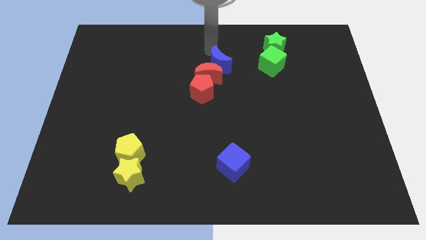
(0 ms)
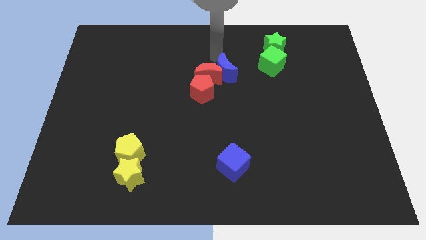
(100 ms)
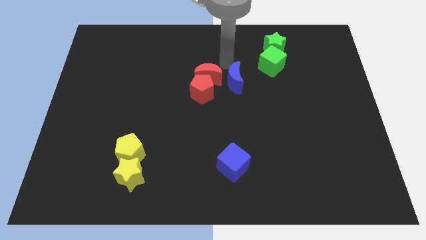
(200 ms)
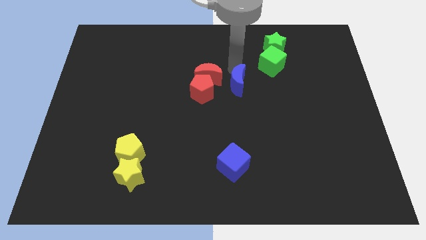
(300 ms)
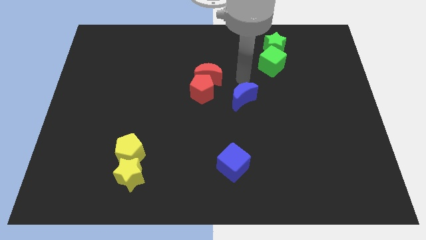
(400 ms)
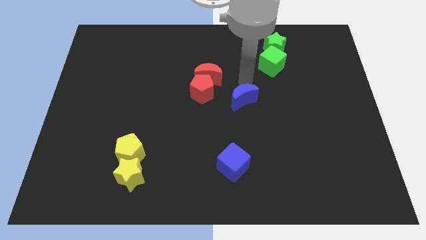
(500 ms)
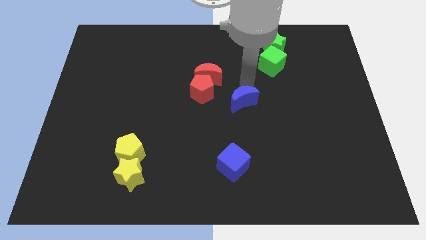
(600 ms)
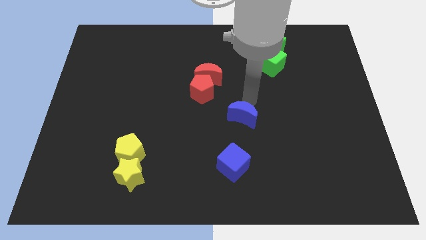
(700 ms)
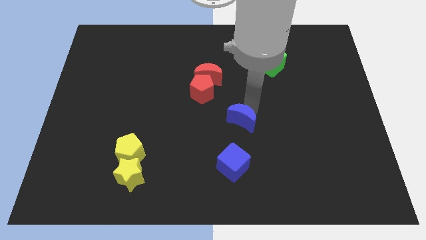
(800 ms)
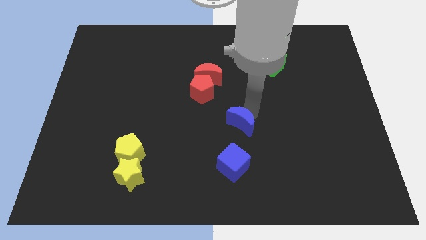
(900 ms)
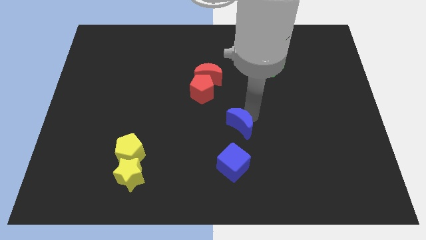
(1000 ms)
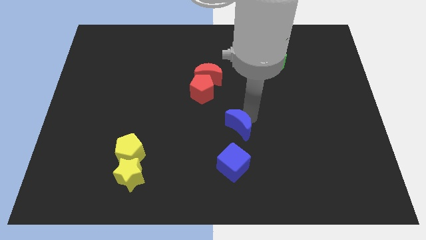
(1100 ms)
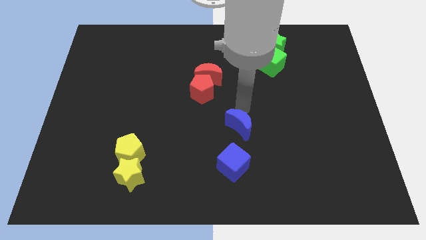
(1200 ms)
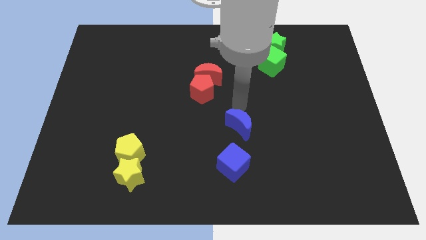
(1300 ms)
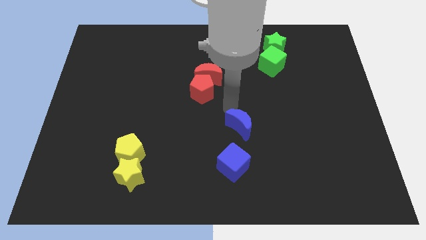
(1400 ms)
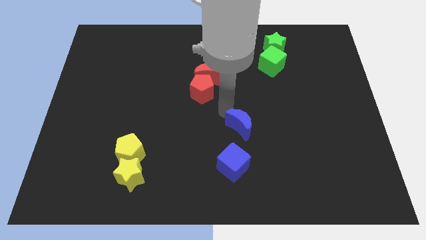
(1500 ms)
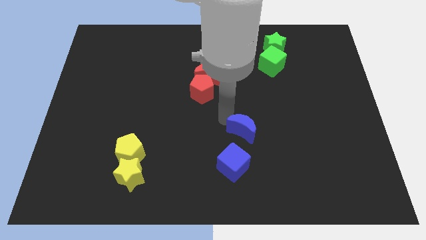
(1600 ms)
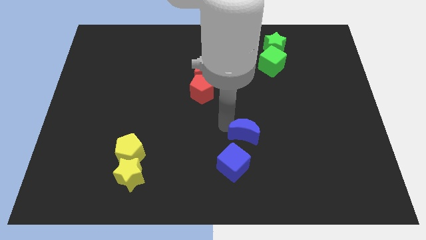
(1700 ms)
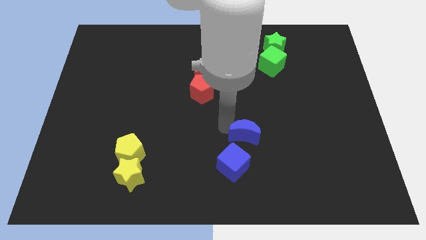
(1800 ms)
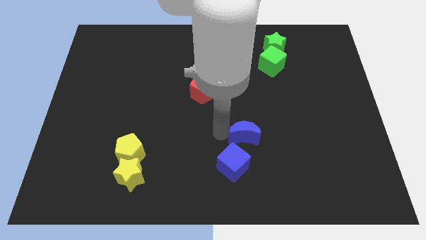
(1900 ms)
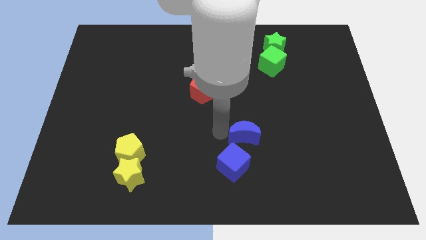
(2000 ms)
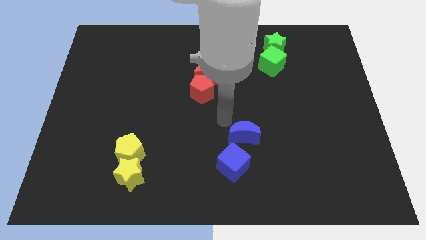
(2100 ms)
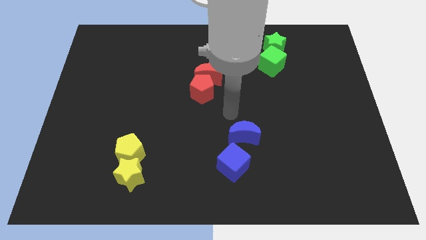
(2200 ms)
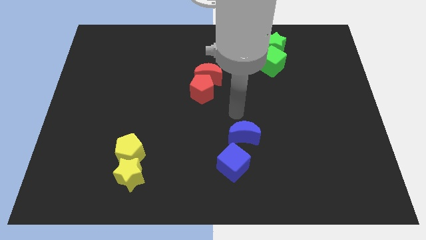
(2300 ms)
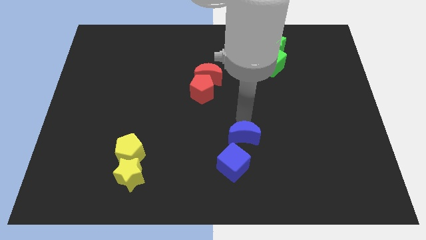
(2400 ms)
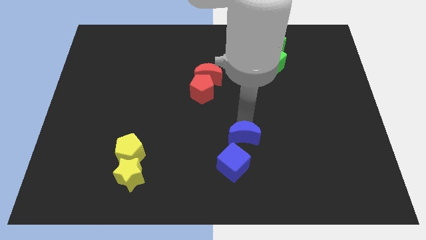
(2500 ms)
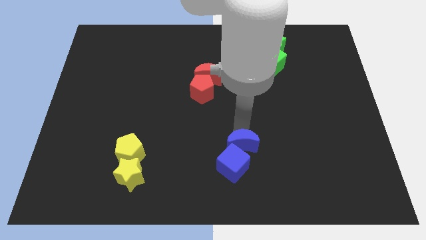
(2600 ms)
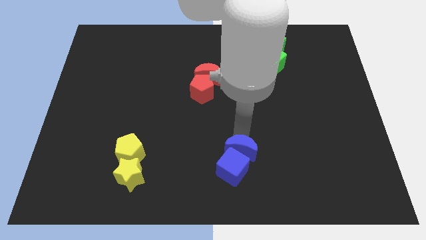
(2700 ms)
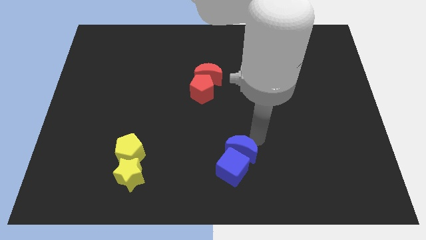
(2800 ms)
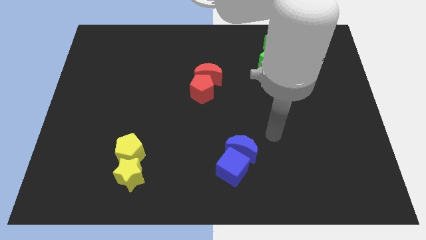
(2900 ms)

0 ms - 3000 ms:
place the blue crescent above the blue blue cube

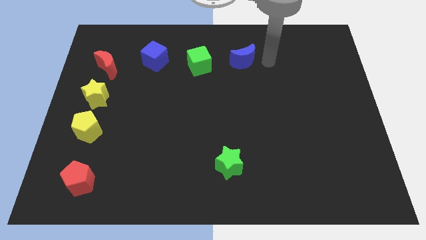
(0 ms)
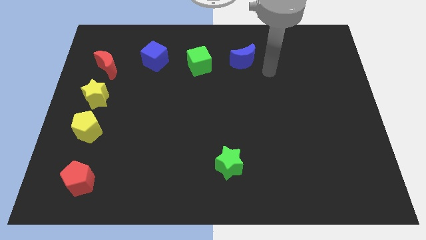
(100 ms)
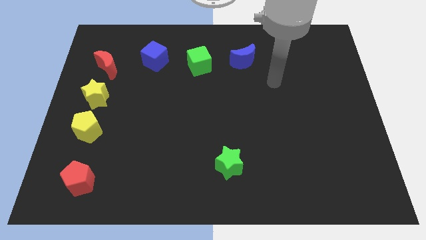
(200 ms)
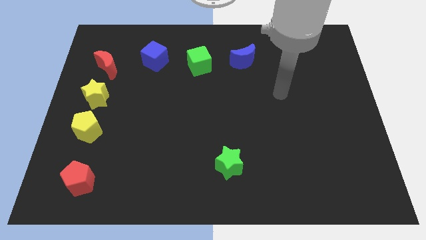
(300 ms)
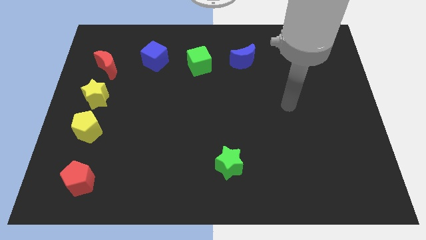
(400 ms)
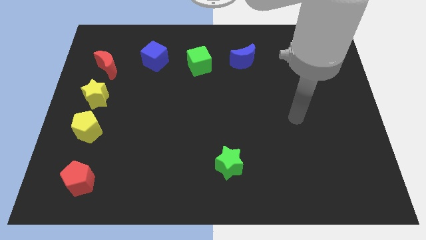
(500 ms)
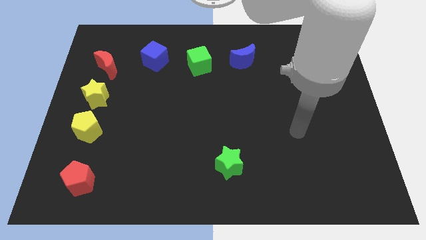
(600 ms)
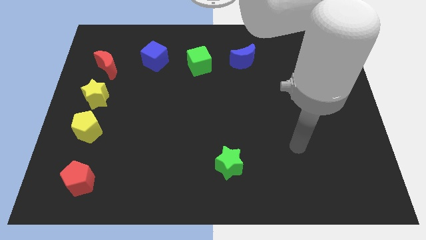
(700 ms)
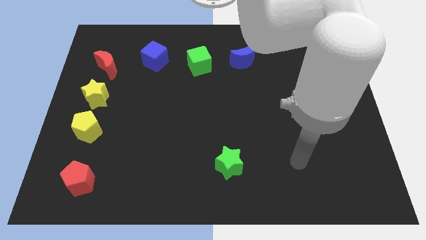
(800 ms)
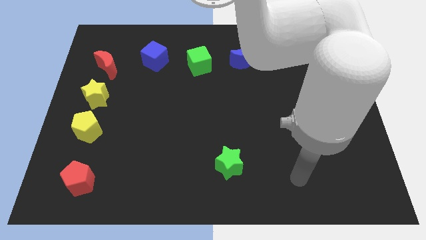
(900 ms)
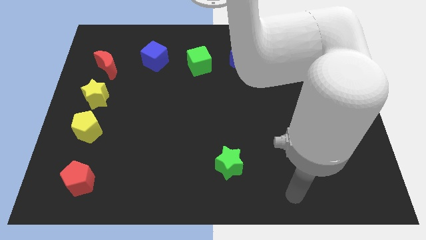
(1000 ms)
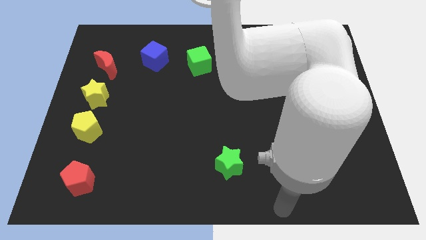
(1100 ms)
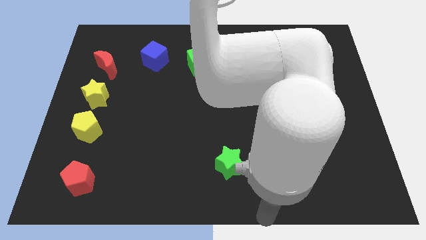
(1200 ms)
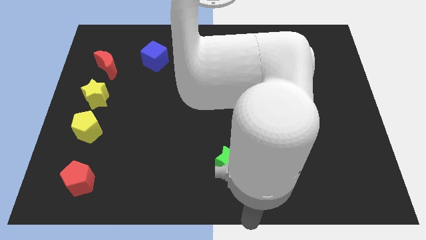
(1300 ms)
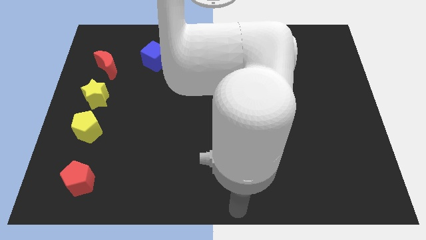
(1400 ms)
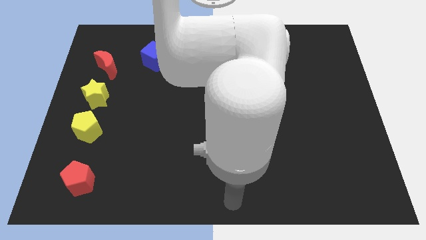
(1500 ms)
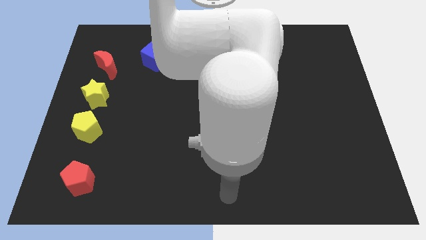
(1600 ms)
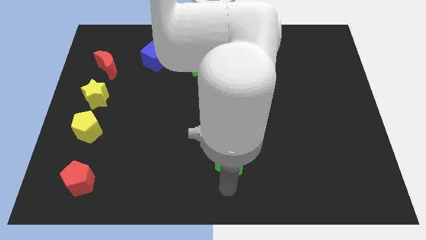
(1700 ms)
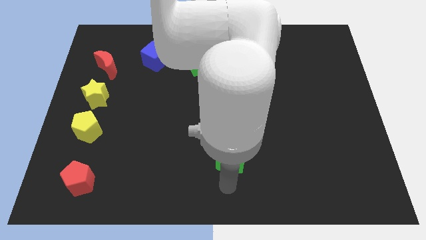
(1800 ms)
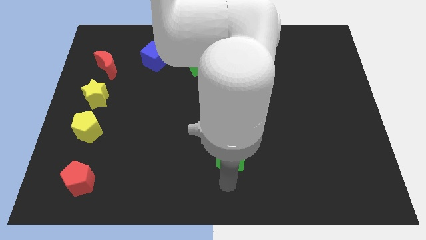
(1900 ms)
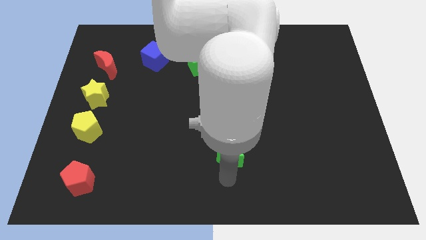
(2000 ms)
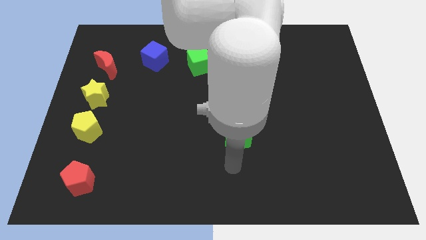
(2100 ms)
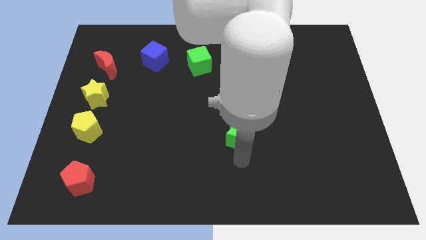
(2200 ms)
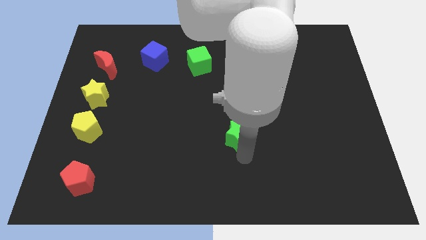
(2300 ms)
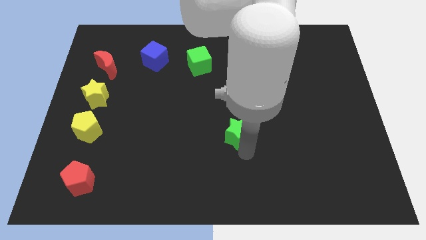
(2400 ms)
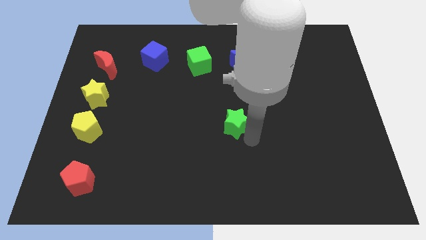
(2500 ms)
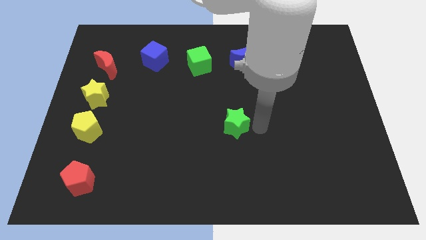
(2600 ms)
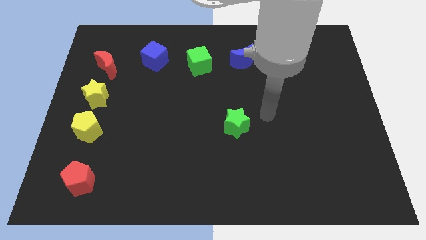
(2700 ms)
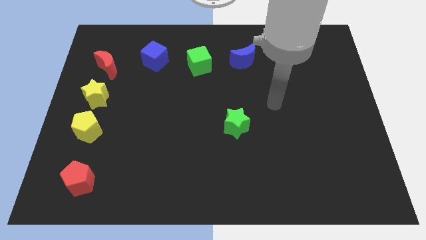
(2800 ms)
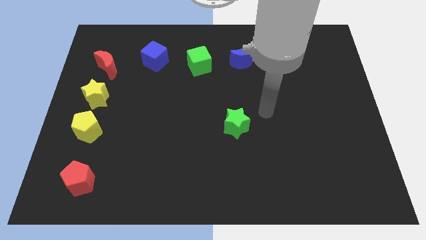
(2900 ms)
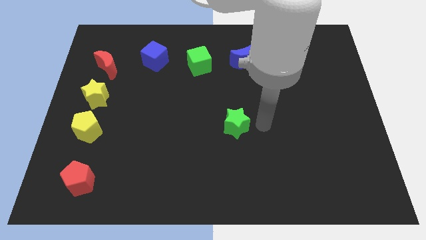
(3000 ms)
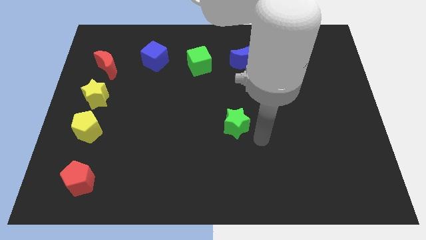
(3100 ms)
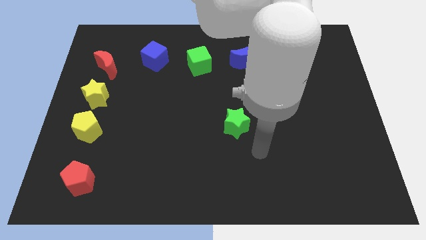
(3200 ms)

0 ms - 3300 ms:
move the green star to the center of the board

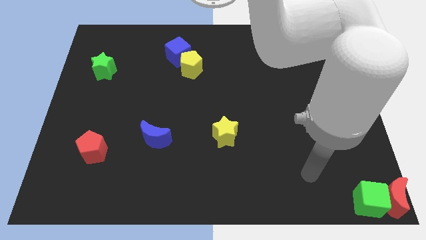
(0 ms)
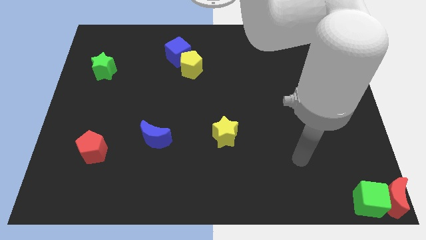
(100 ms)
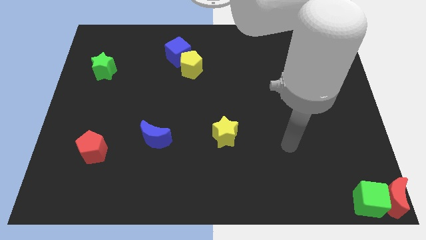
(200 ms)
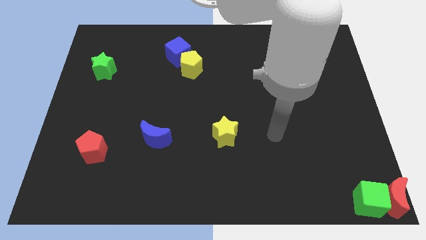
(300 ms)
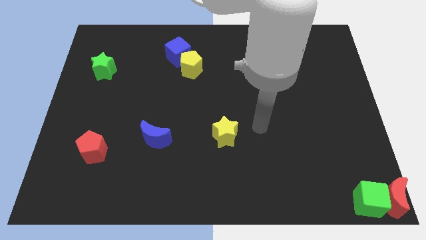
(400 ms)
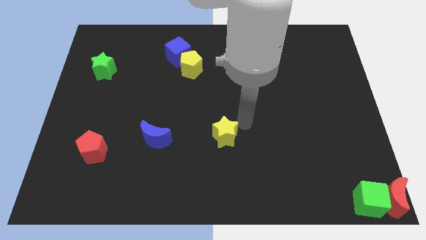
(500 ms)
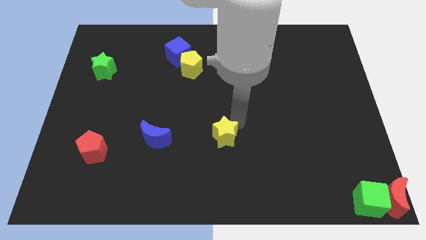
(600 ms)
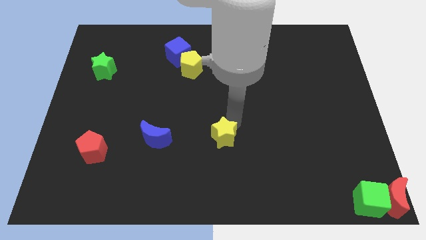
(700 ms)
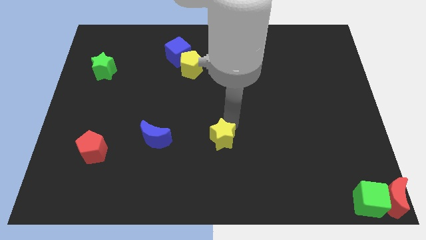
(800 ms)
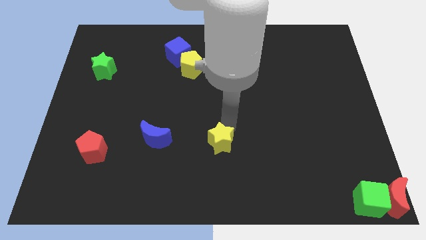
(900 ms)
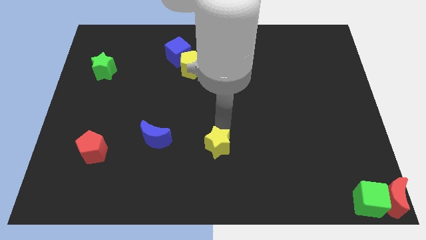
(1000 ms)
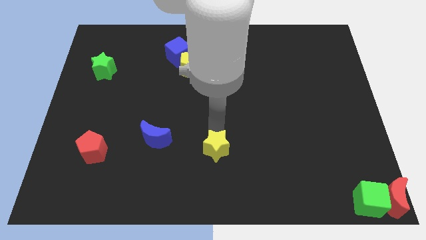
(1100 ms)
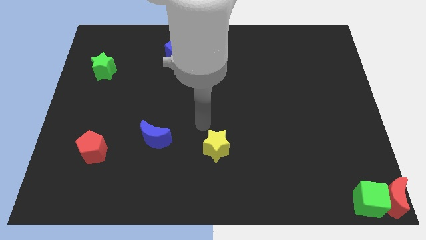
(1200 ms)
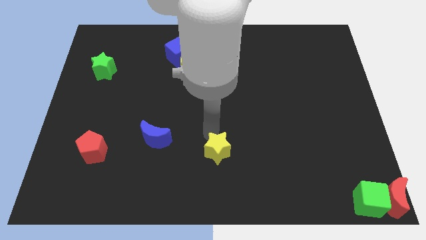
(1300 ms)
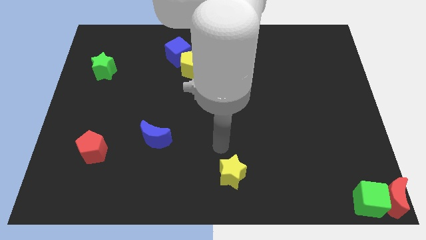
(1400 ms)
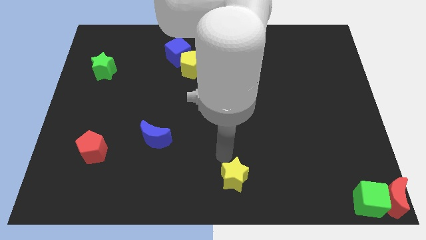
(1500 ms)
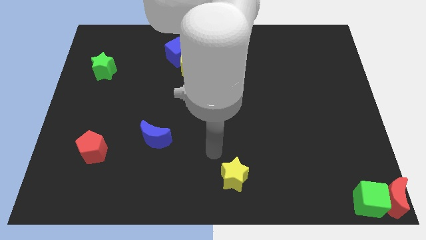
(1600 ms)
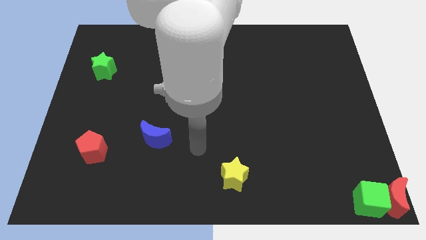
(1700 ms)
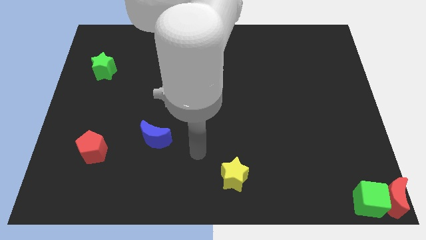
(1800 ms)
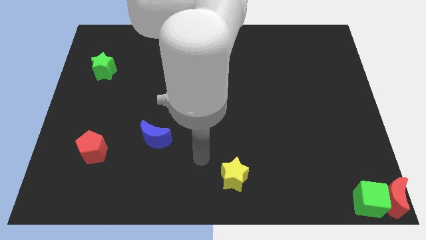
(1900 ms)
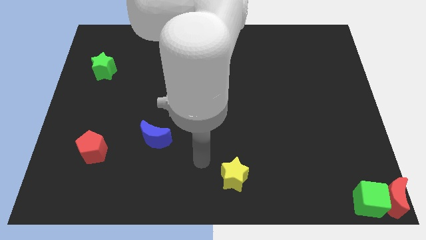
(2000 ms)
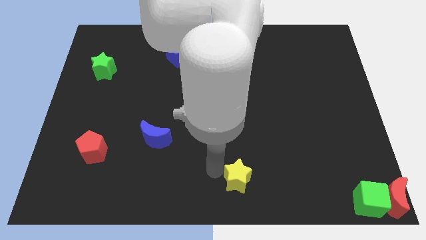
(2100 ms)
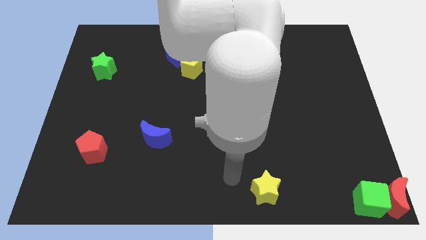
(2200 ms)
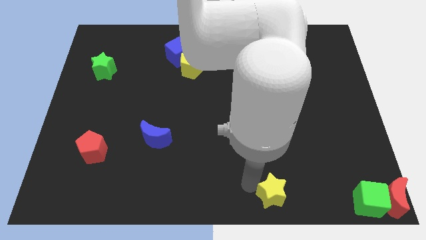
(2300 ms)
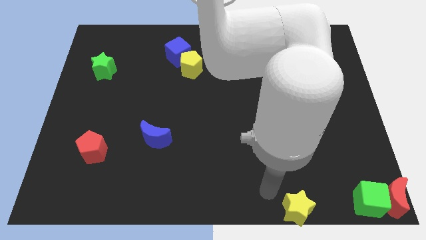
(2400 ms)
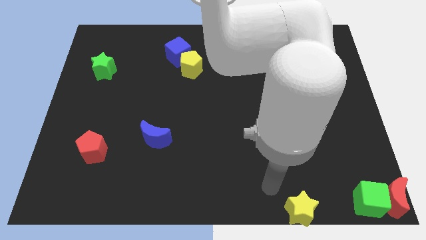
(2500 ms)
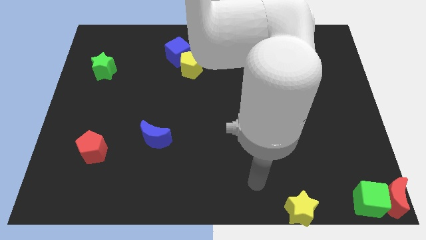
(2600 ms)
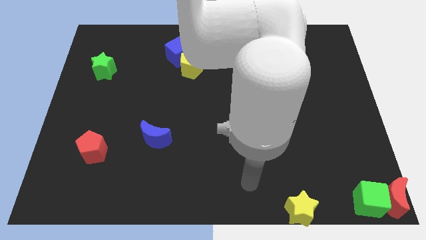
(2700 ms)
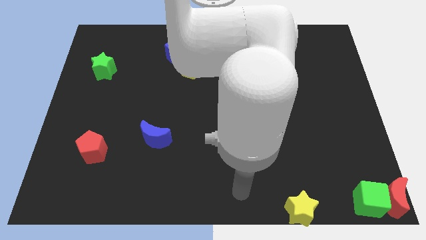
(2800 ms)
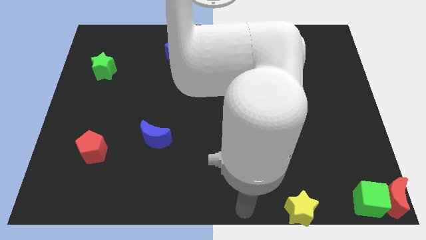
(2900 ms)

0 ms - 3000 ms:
move the yellow star to the horizontal left of the green cube
